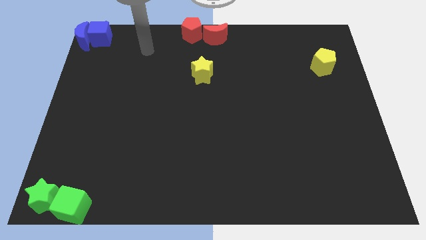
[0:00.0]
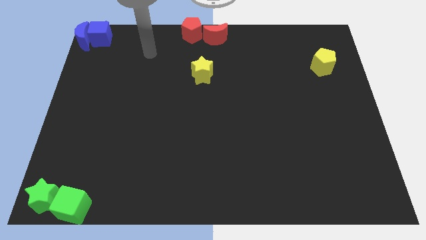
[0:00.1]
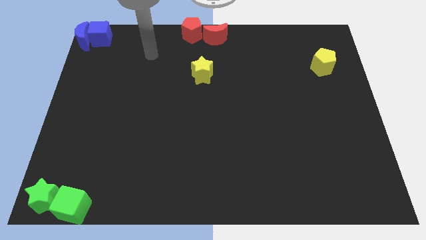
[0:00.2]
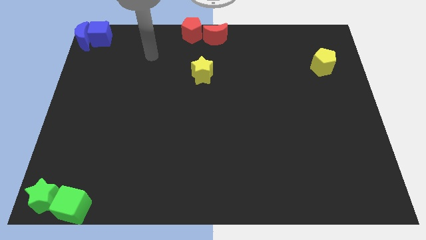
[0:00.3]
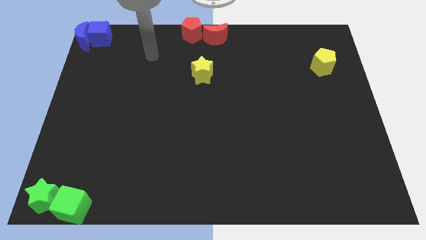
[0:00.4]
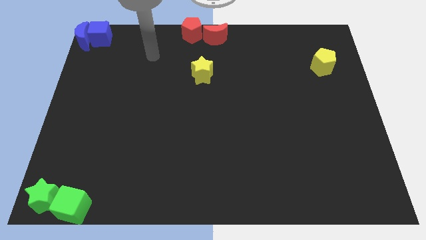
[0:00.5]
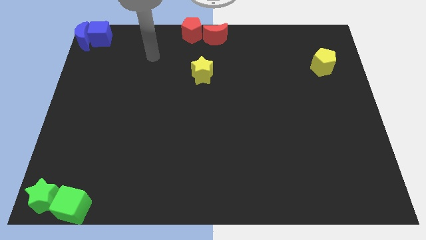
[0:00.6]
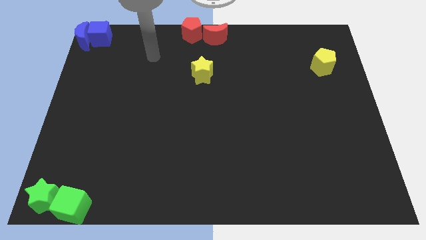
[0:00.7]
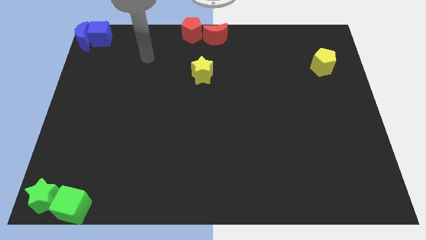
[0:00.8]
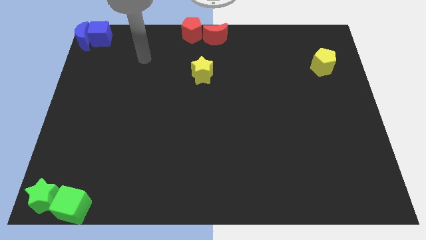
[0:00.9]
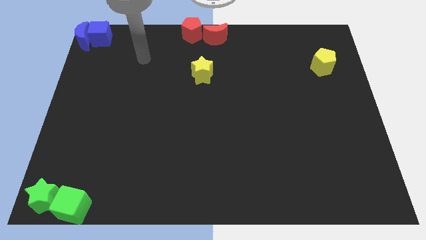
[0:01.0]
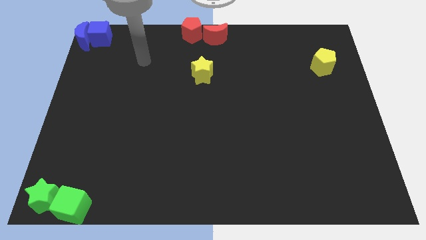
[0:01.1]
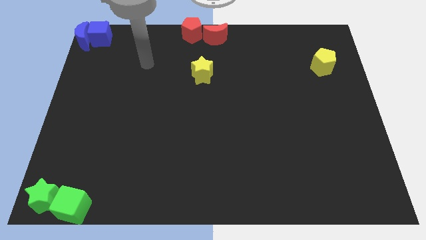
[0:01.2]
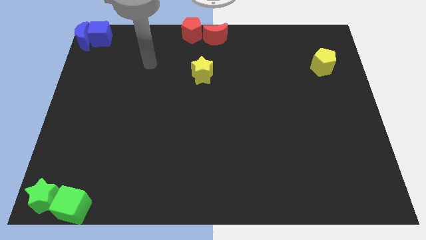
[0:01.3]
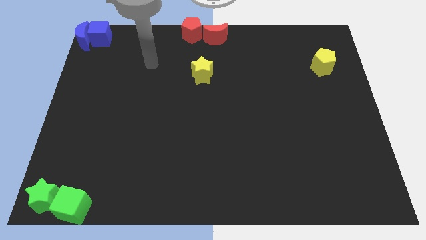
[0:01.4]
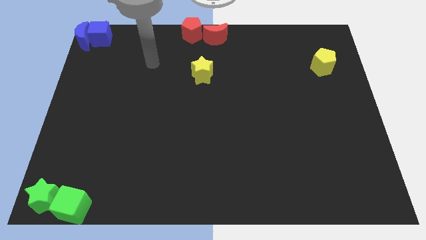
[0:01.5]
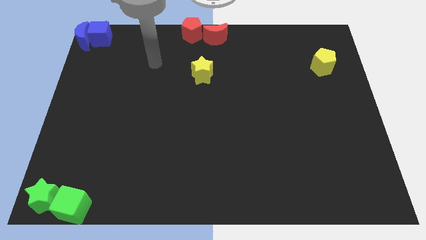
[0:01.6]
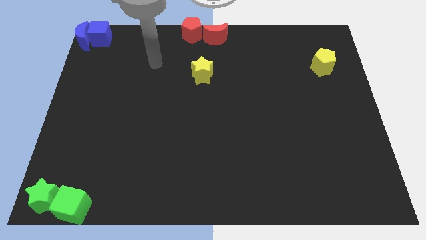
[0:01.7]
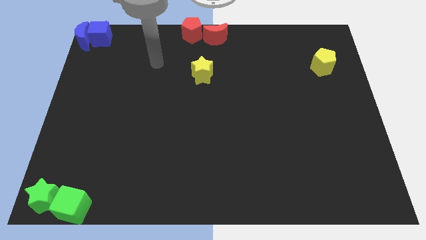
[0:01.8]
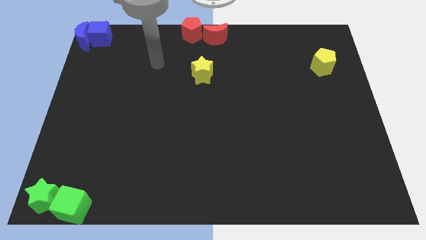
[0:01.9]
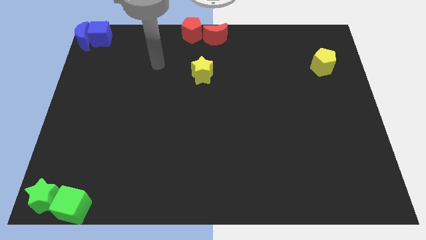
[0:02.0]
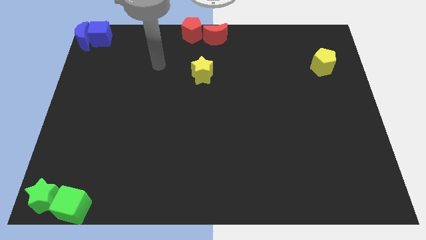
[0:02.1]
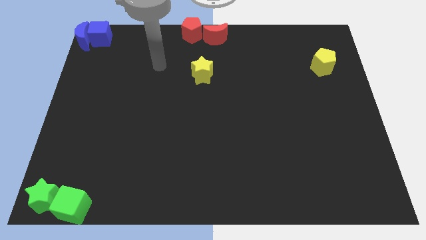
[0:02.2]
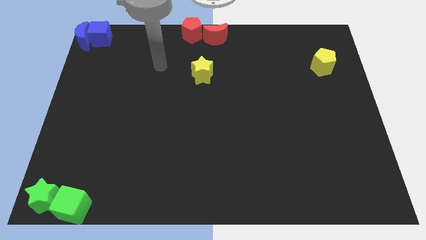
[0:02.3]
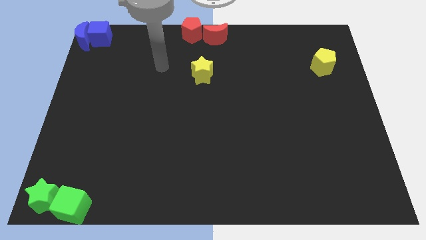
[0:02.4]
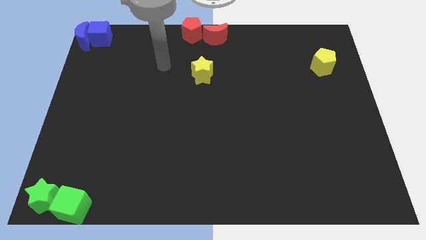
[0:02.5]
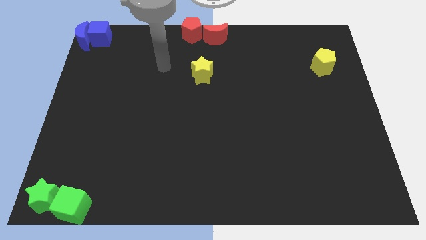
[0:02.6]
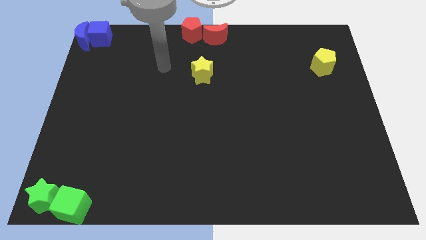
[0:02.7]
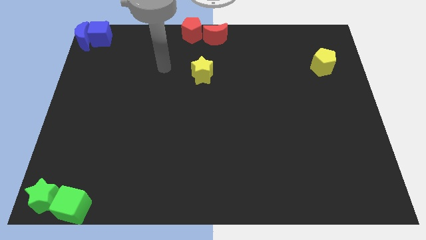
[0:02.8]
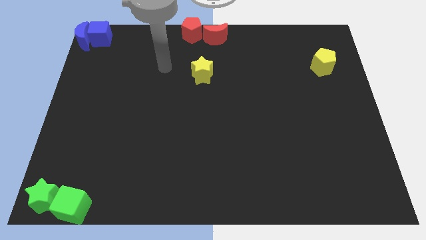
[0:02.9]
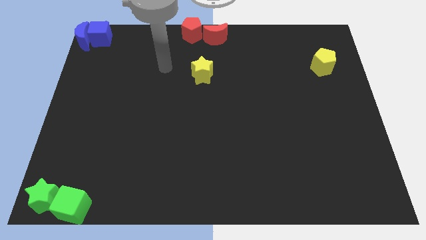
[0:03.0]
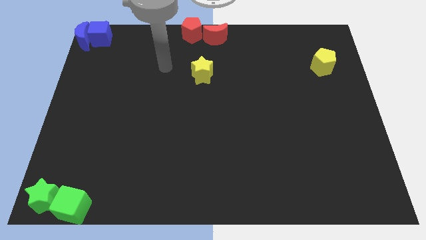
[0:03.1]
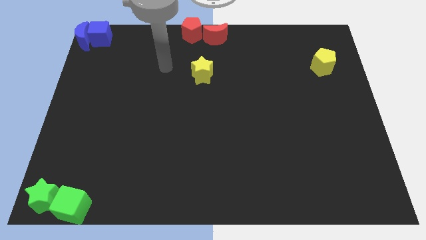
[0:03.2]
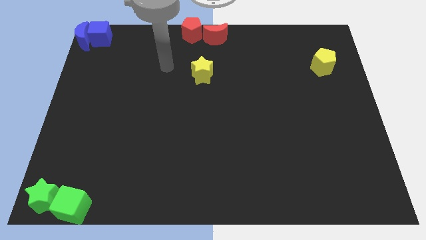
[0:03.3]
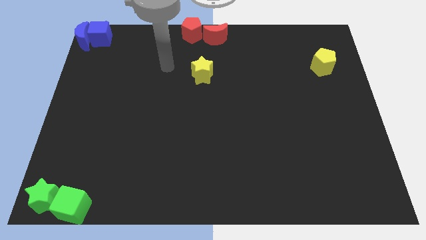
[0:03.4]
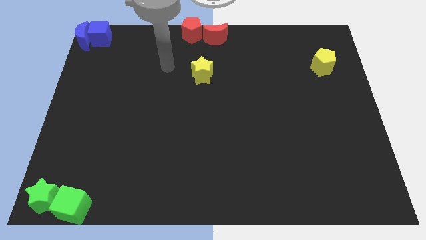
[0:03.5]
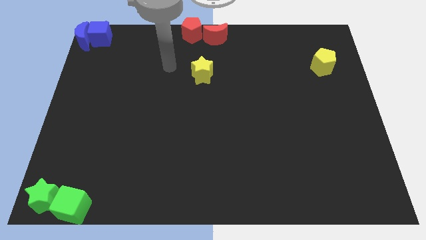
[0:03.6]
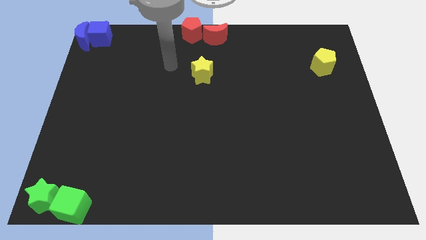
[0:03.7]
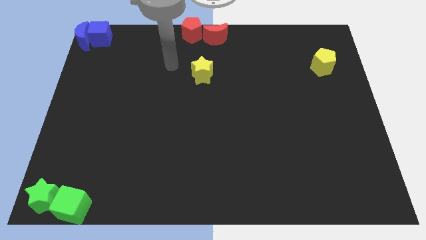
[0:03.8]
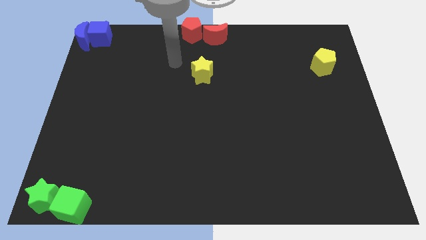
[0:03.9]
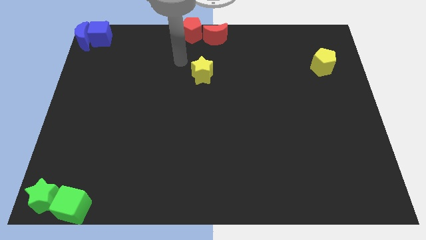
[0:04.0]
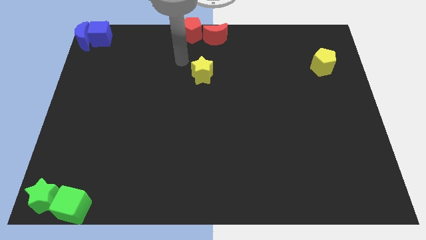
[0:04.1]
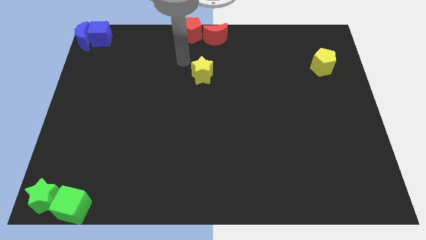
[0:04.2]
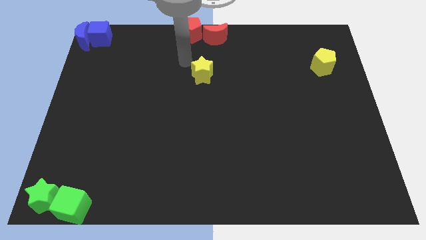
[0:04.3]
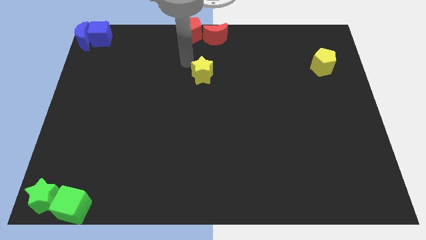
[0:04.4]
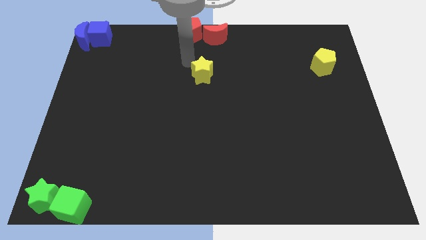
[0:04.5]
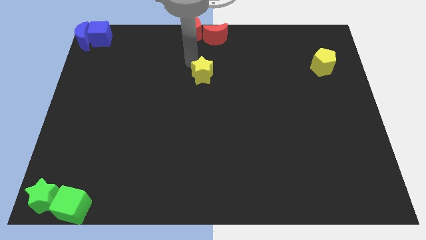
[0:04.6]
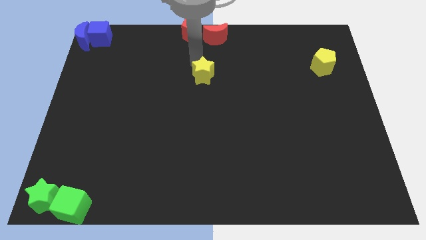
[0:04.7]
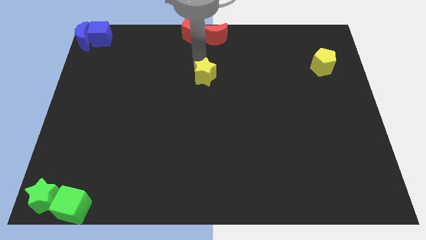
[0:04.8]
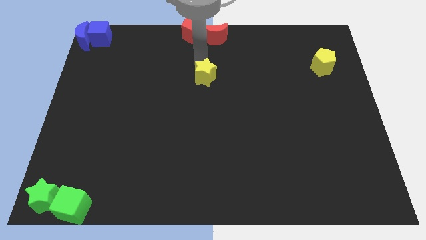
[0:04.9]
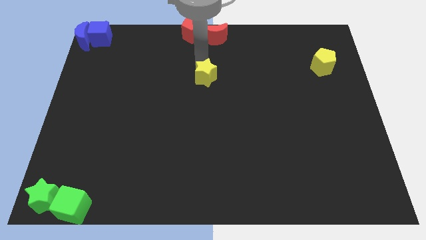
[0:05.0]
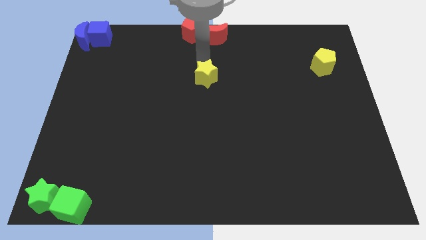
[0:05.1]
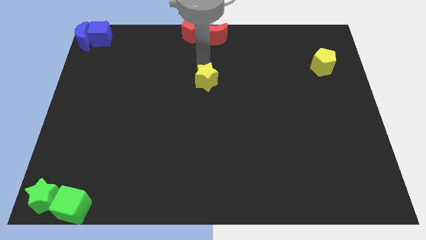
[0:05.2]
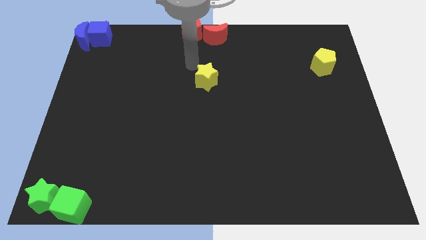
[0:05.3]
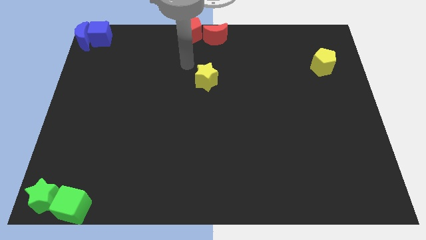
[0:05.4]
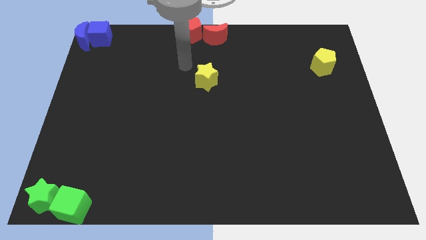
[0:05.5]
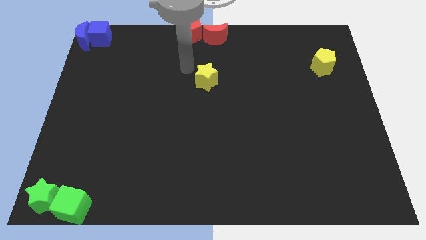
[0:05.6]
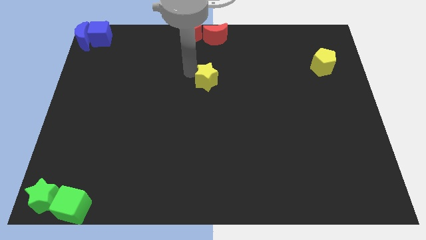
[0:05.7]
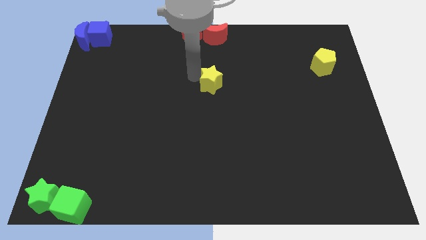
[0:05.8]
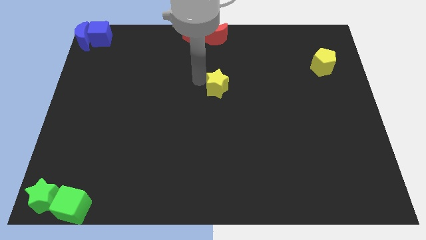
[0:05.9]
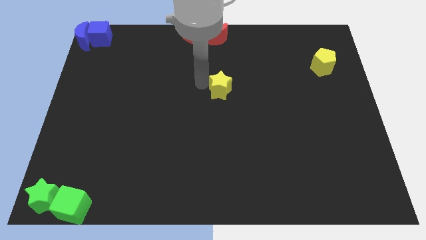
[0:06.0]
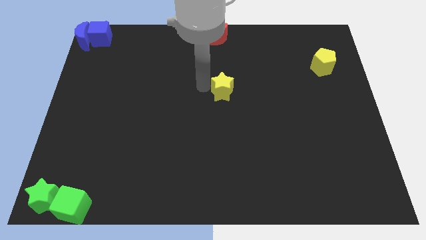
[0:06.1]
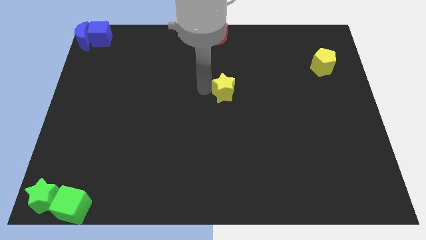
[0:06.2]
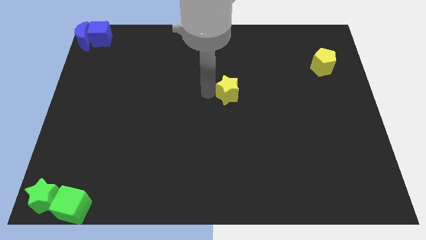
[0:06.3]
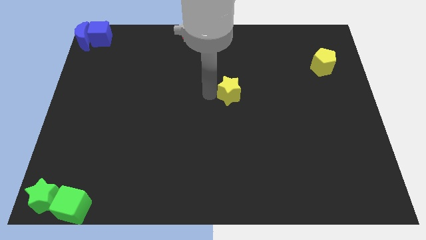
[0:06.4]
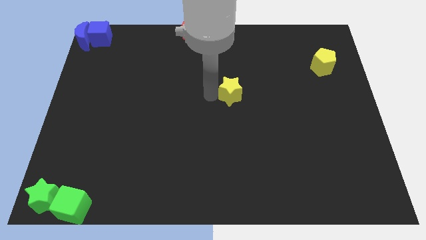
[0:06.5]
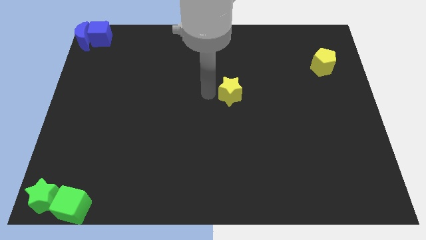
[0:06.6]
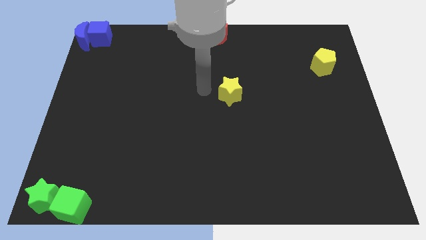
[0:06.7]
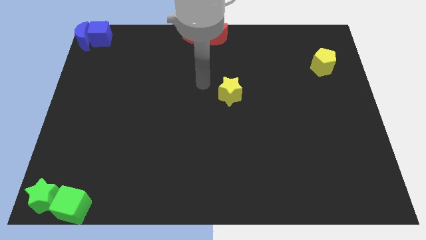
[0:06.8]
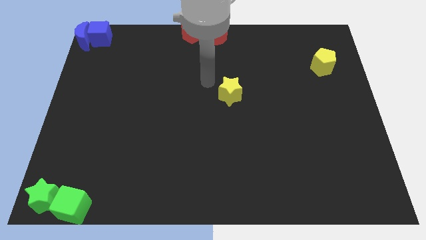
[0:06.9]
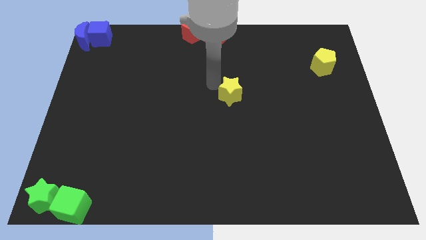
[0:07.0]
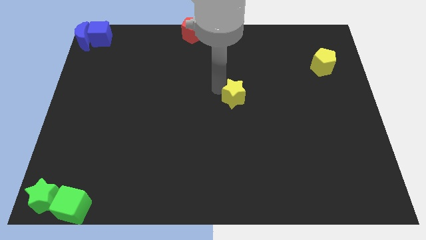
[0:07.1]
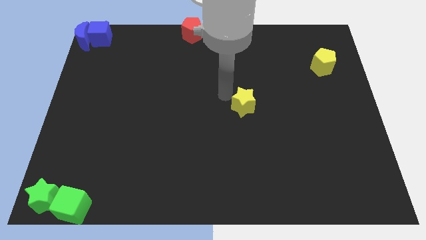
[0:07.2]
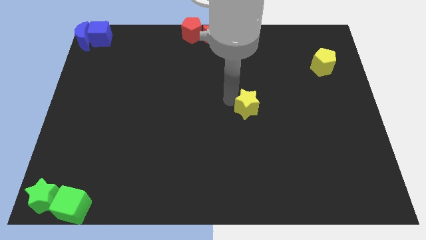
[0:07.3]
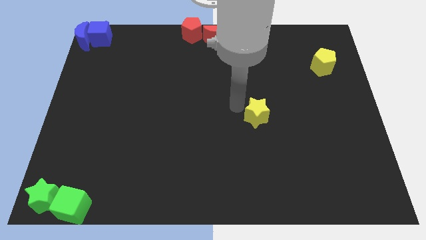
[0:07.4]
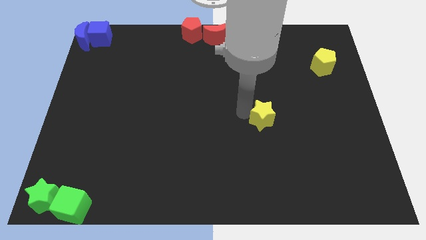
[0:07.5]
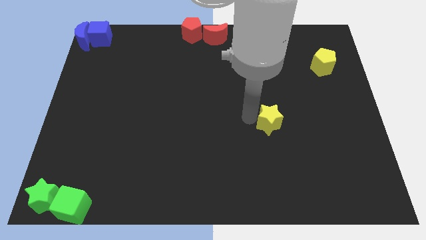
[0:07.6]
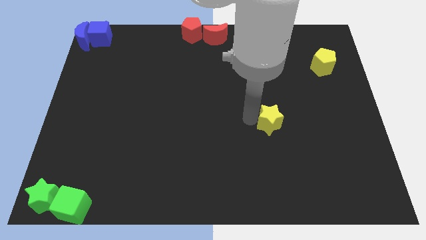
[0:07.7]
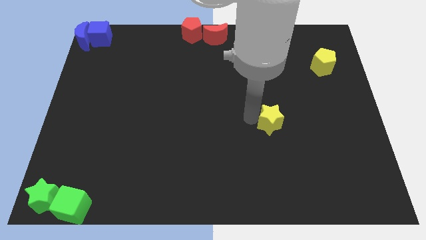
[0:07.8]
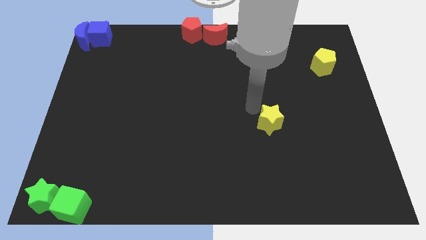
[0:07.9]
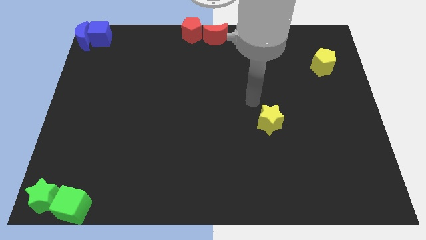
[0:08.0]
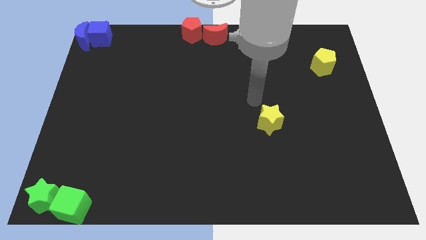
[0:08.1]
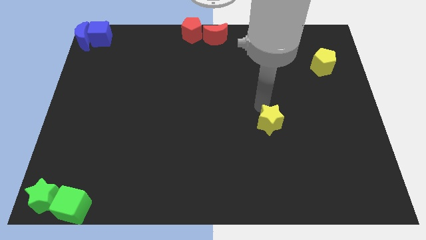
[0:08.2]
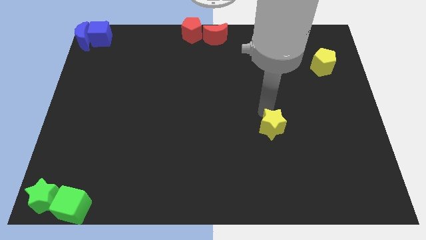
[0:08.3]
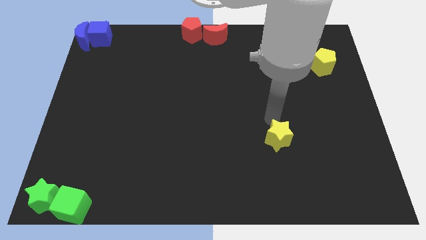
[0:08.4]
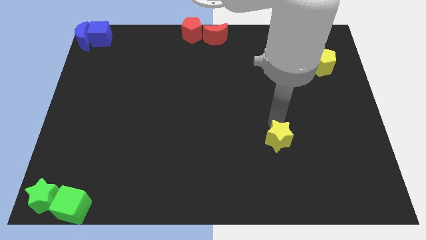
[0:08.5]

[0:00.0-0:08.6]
move the yellow star diagonally below the yellow pentagon

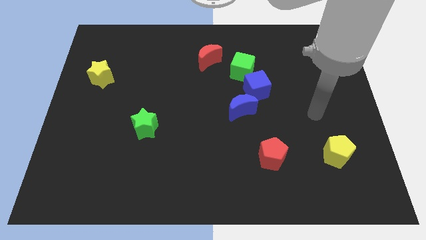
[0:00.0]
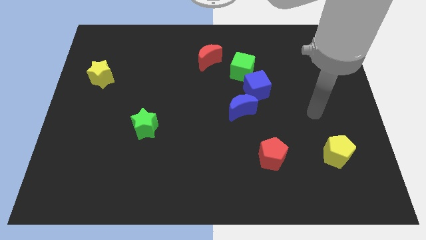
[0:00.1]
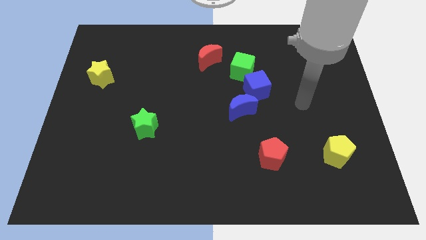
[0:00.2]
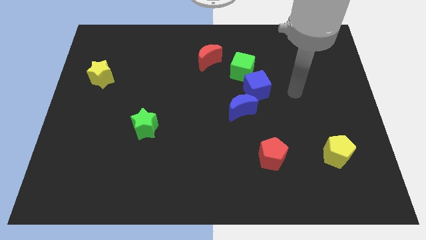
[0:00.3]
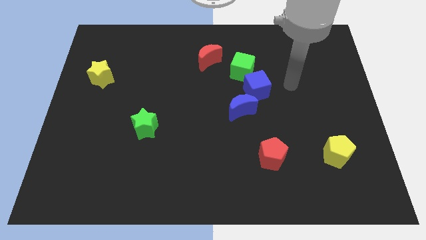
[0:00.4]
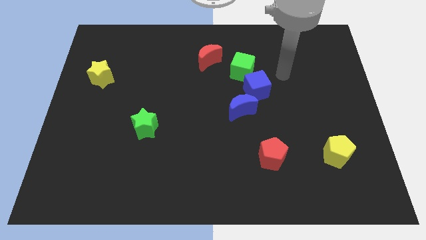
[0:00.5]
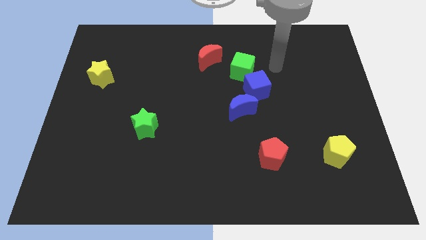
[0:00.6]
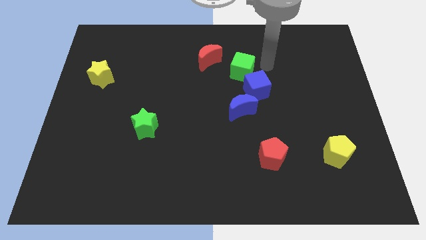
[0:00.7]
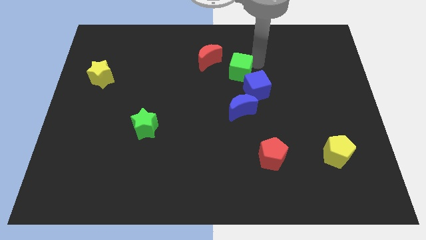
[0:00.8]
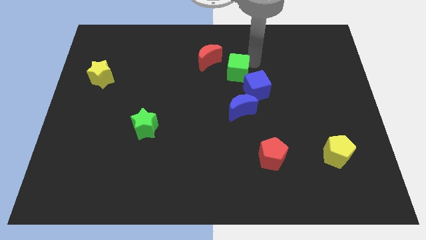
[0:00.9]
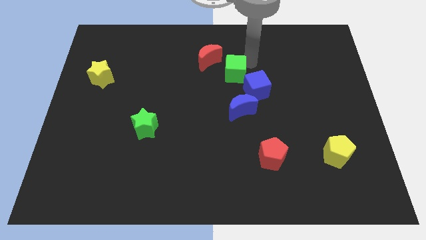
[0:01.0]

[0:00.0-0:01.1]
tap on the top right side of green cube
